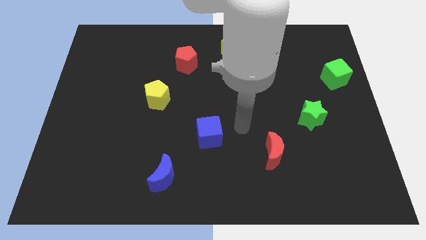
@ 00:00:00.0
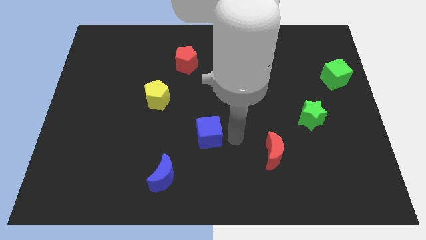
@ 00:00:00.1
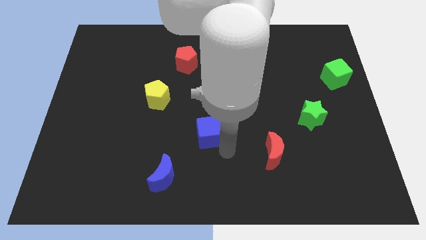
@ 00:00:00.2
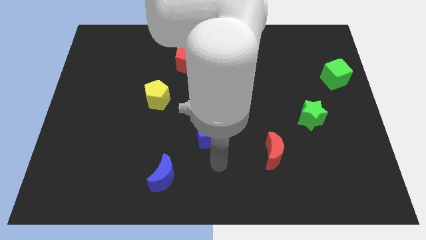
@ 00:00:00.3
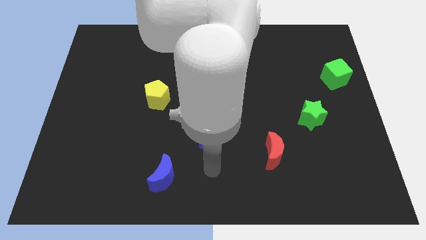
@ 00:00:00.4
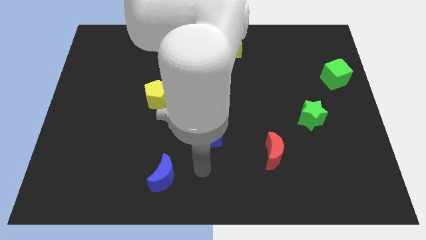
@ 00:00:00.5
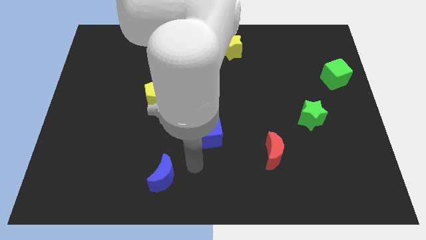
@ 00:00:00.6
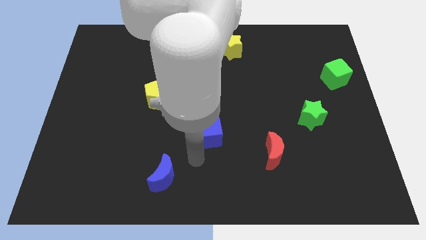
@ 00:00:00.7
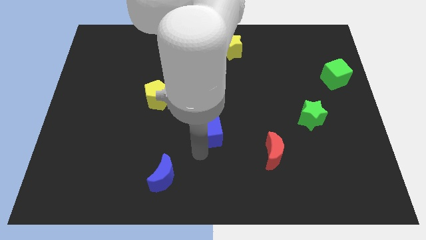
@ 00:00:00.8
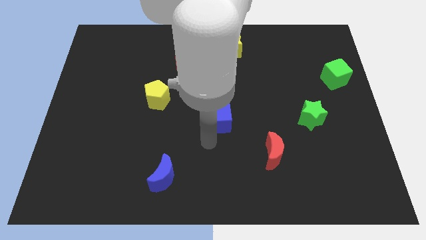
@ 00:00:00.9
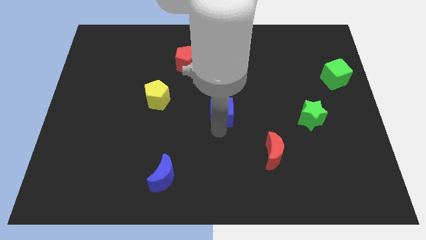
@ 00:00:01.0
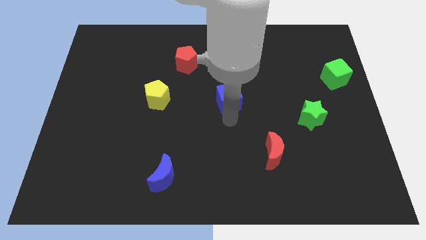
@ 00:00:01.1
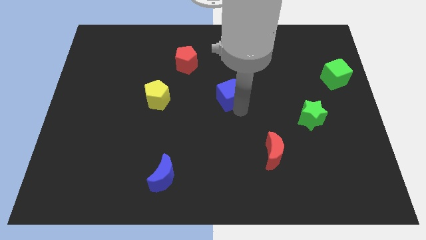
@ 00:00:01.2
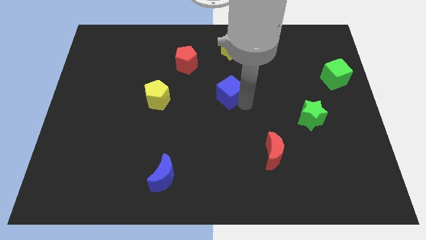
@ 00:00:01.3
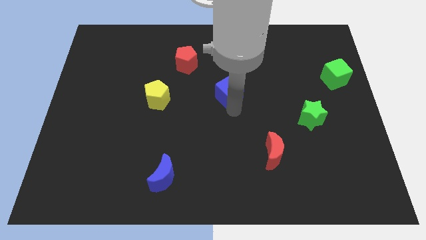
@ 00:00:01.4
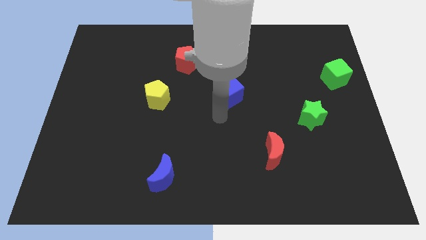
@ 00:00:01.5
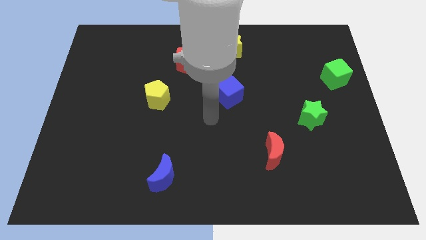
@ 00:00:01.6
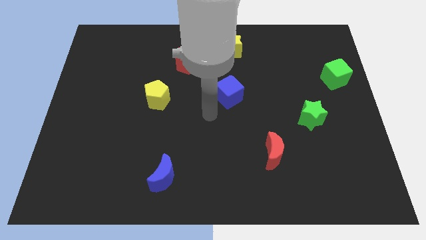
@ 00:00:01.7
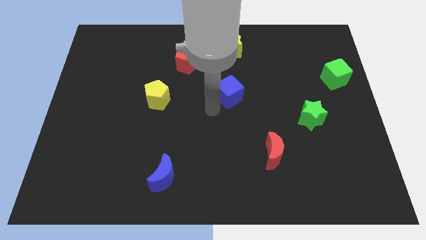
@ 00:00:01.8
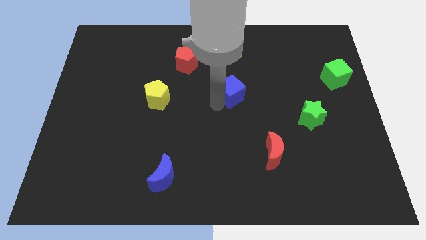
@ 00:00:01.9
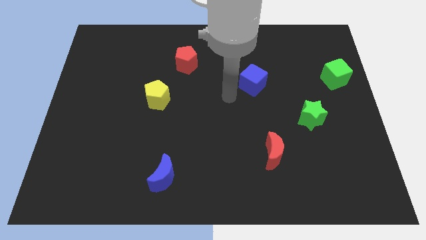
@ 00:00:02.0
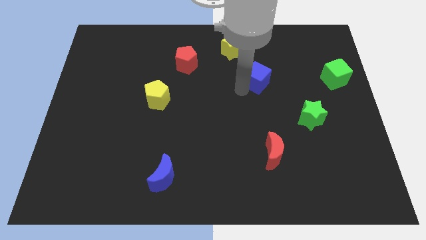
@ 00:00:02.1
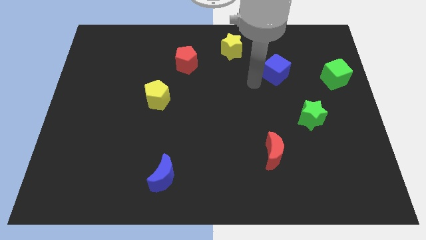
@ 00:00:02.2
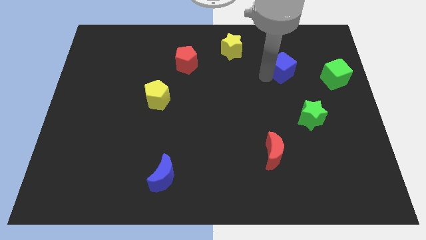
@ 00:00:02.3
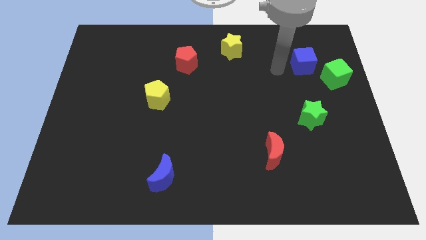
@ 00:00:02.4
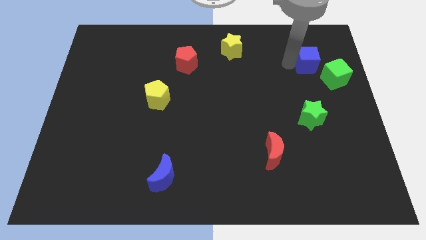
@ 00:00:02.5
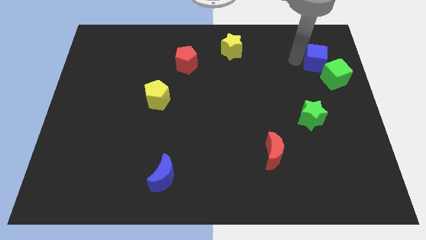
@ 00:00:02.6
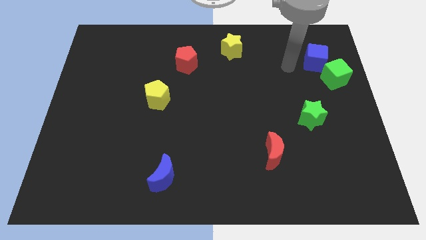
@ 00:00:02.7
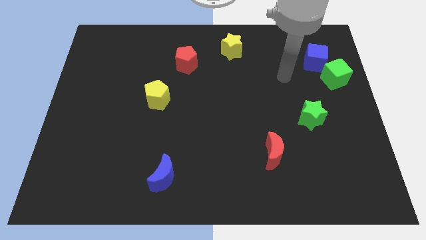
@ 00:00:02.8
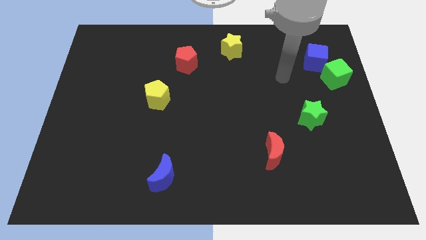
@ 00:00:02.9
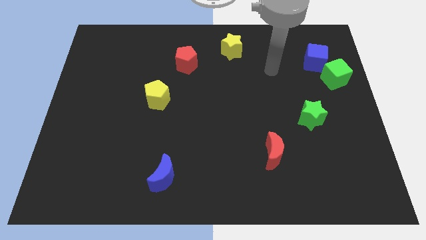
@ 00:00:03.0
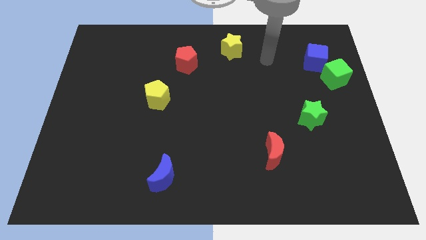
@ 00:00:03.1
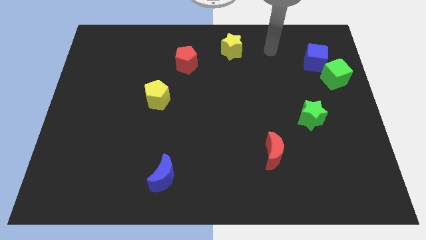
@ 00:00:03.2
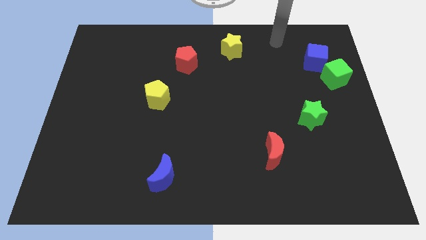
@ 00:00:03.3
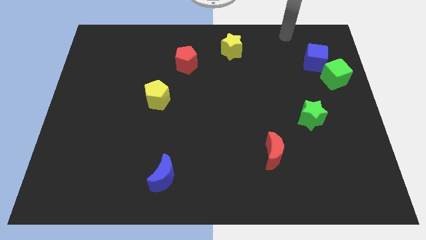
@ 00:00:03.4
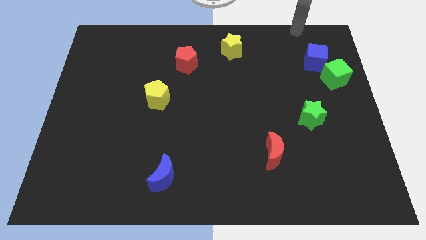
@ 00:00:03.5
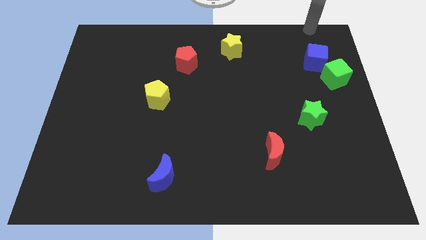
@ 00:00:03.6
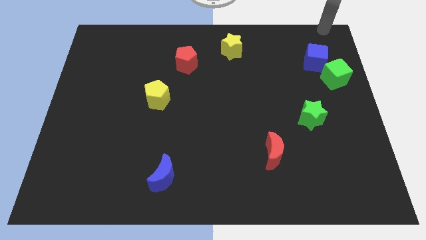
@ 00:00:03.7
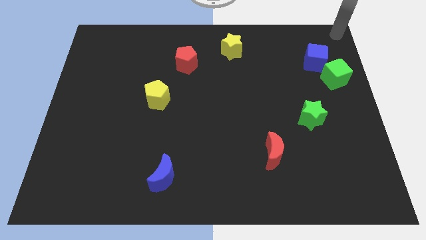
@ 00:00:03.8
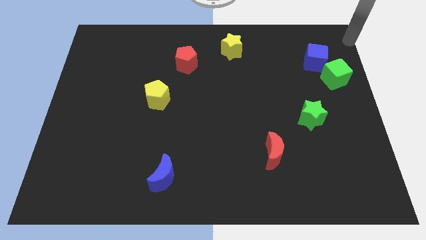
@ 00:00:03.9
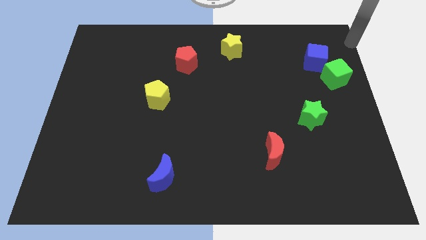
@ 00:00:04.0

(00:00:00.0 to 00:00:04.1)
push the blue cube above the green cube

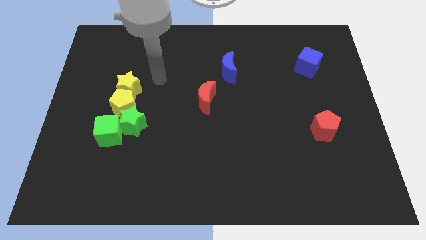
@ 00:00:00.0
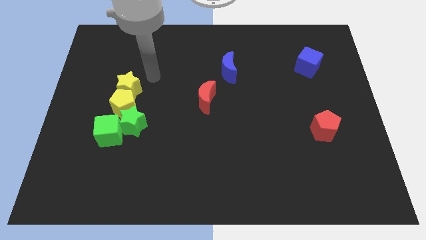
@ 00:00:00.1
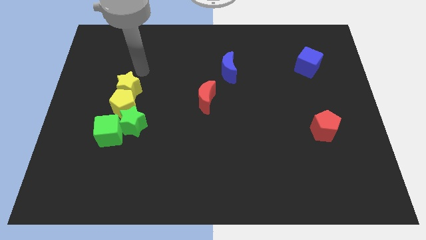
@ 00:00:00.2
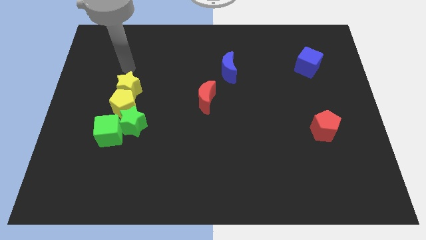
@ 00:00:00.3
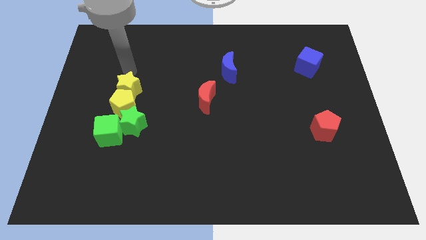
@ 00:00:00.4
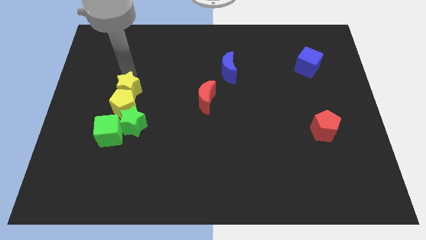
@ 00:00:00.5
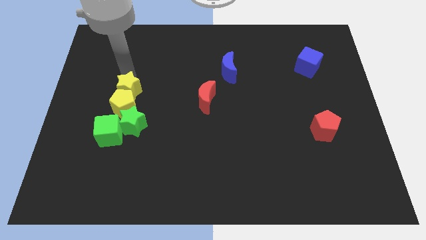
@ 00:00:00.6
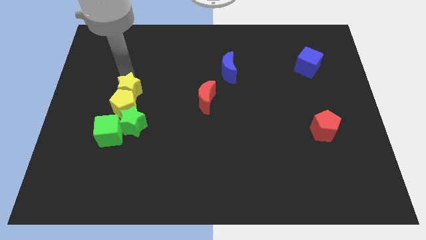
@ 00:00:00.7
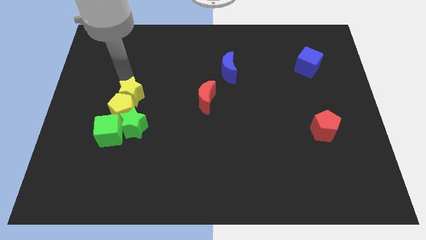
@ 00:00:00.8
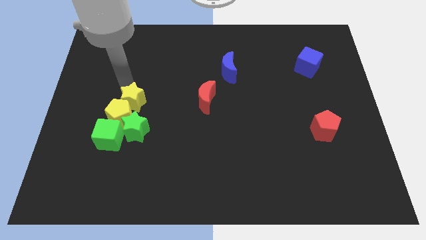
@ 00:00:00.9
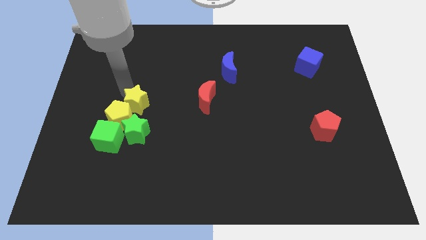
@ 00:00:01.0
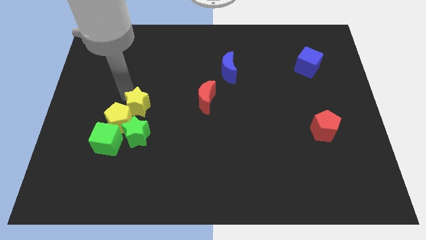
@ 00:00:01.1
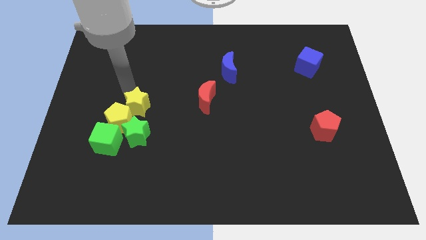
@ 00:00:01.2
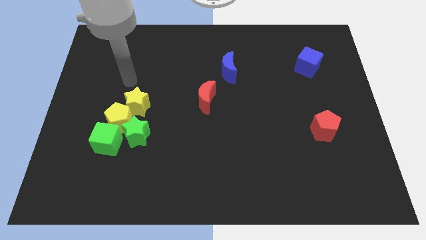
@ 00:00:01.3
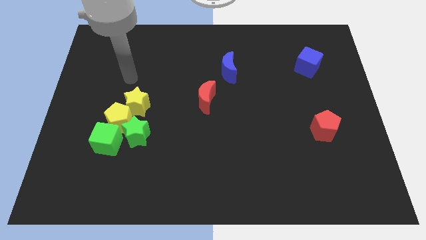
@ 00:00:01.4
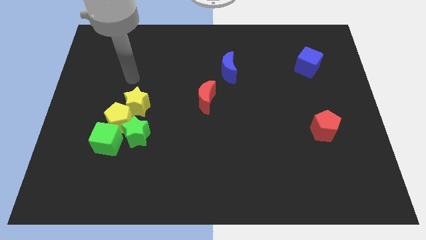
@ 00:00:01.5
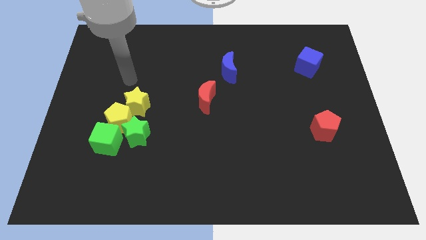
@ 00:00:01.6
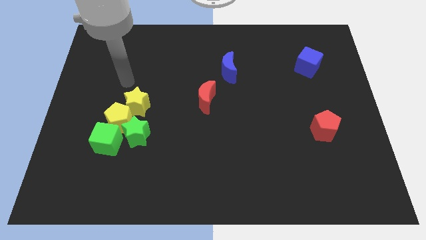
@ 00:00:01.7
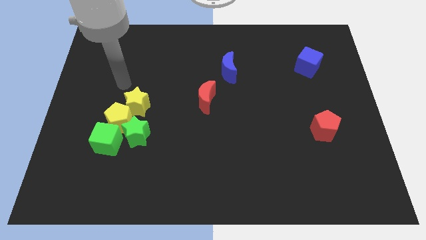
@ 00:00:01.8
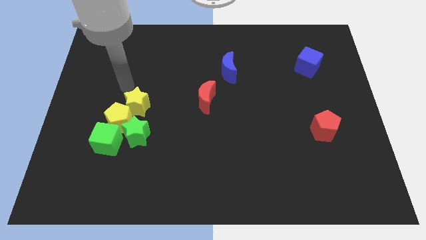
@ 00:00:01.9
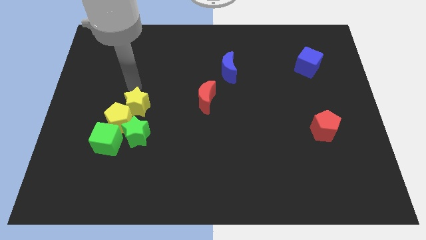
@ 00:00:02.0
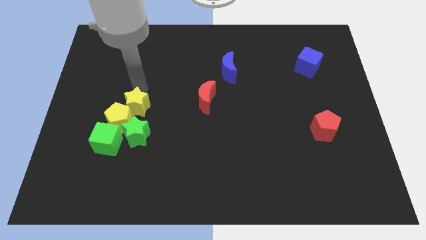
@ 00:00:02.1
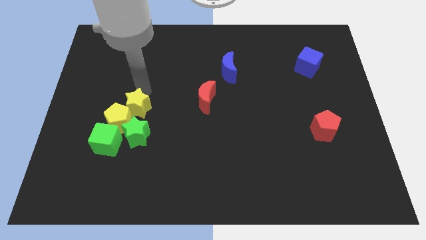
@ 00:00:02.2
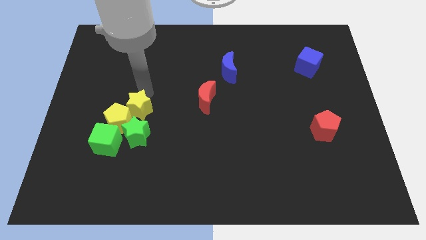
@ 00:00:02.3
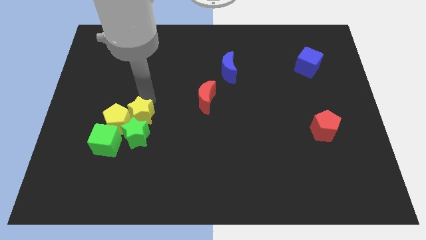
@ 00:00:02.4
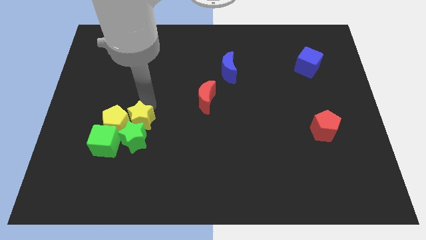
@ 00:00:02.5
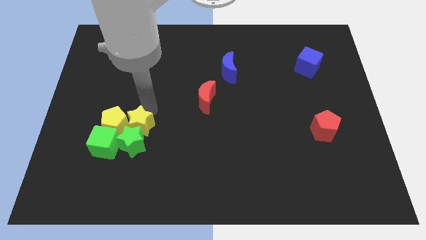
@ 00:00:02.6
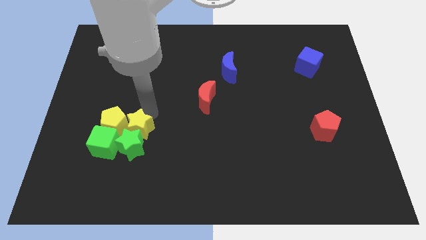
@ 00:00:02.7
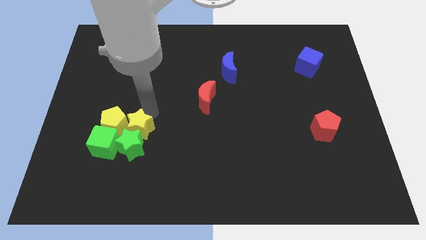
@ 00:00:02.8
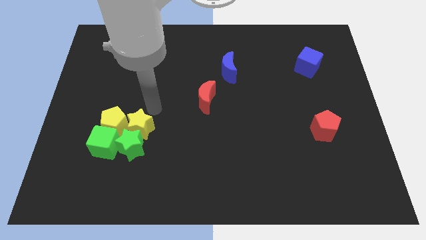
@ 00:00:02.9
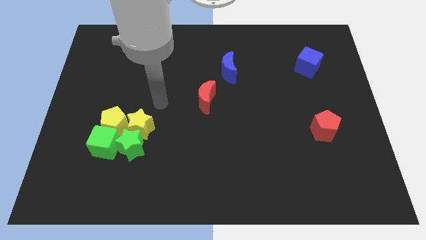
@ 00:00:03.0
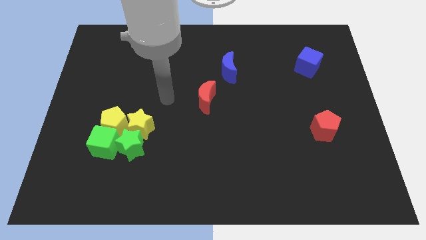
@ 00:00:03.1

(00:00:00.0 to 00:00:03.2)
push the yellow blocks into the green blocks

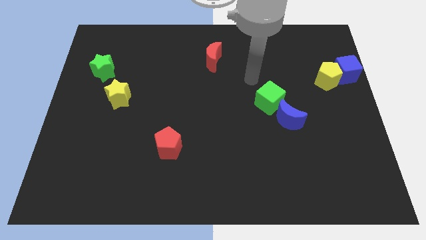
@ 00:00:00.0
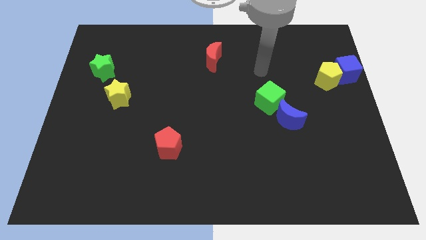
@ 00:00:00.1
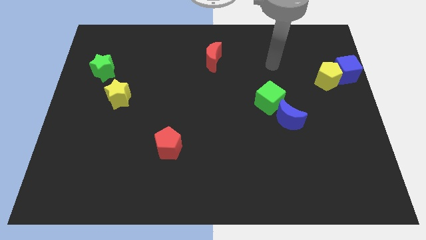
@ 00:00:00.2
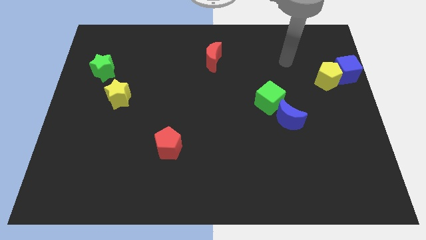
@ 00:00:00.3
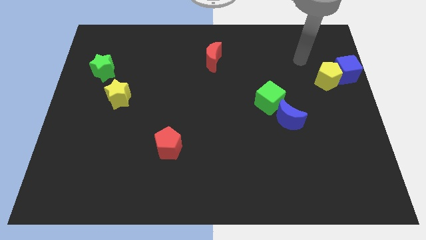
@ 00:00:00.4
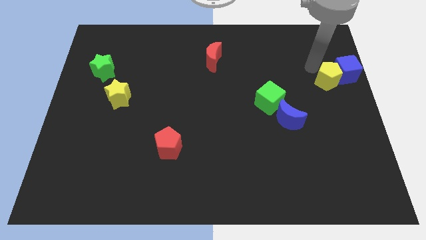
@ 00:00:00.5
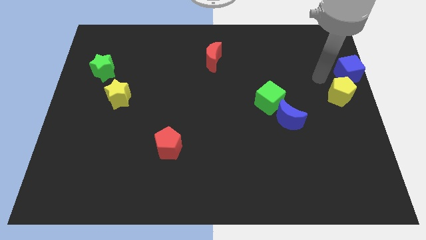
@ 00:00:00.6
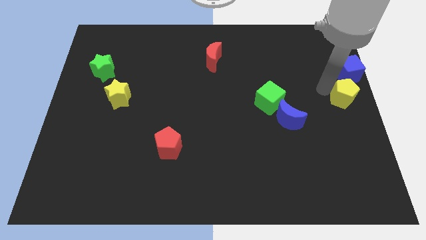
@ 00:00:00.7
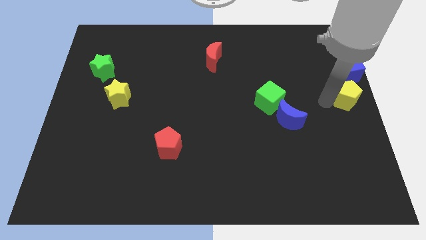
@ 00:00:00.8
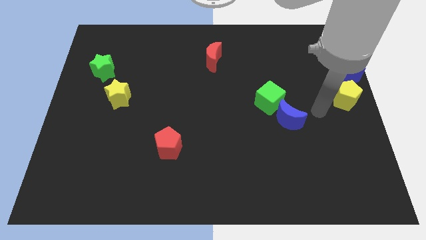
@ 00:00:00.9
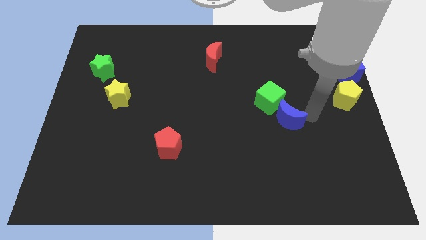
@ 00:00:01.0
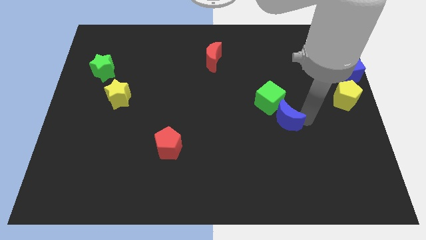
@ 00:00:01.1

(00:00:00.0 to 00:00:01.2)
put the yellow pentagon below the blue cube

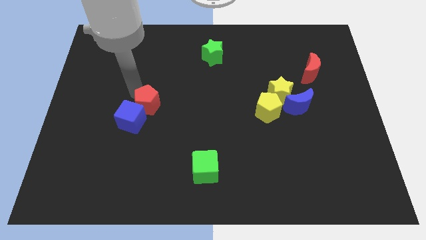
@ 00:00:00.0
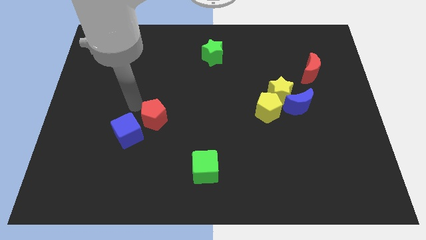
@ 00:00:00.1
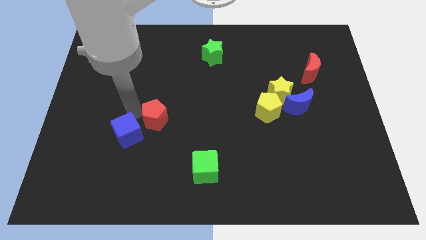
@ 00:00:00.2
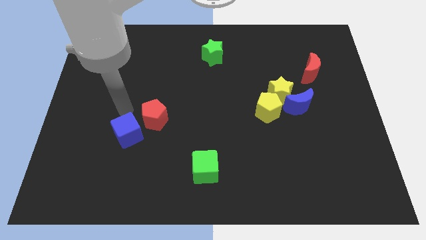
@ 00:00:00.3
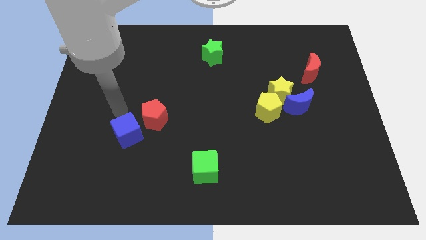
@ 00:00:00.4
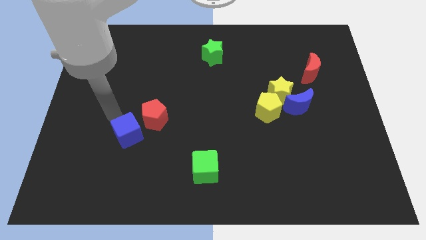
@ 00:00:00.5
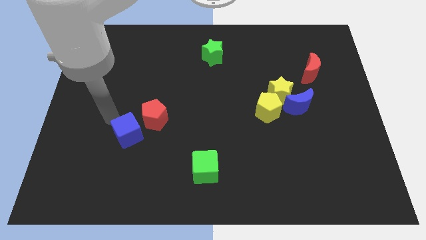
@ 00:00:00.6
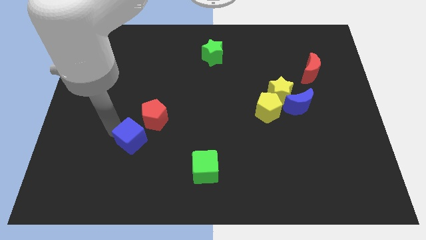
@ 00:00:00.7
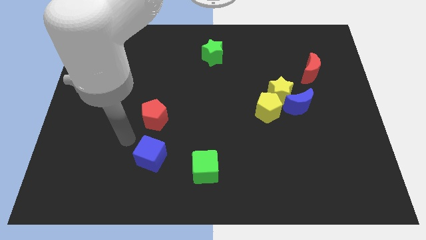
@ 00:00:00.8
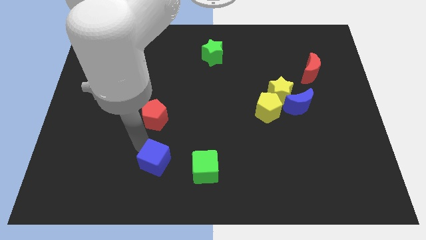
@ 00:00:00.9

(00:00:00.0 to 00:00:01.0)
put the blue cube below the red pentagon
